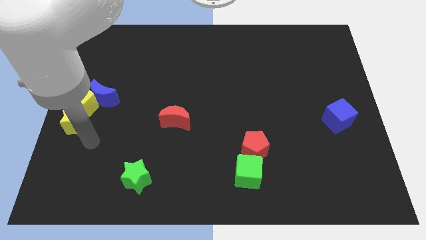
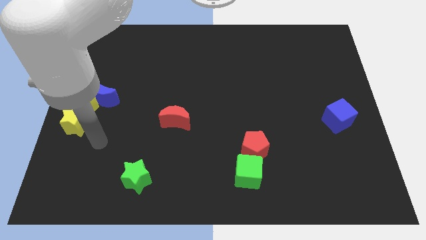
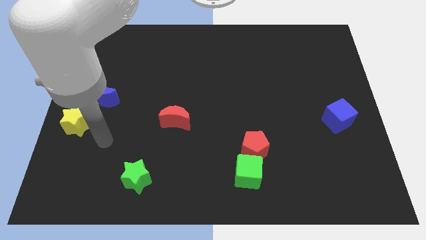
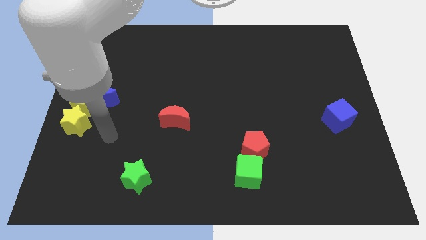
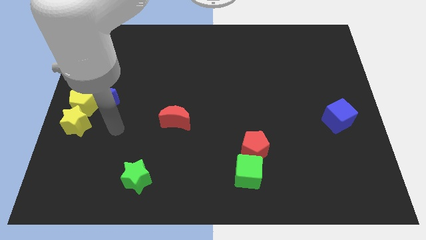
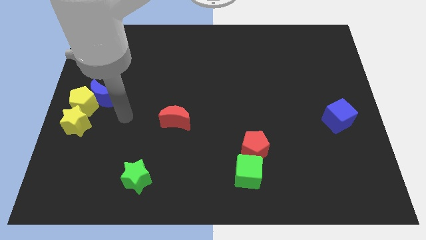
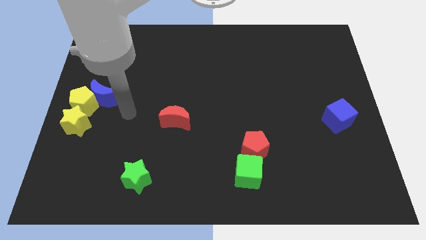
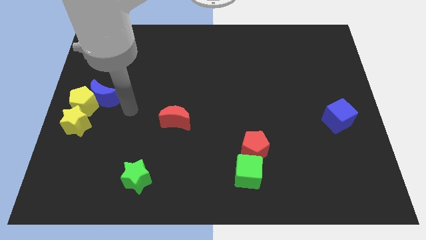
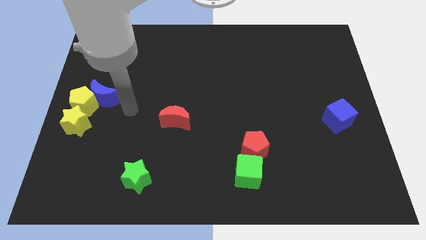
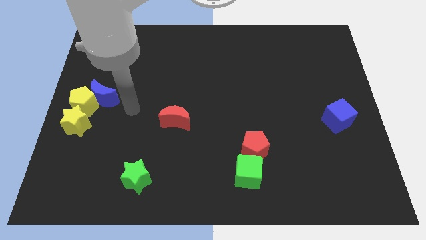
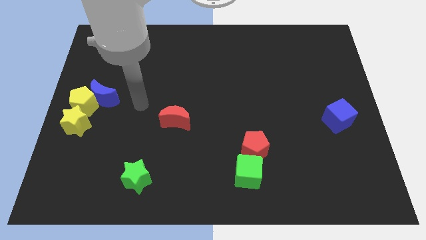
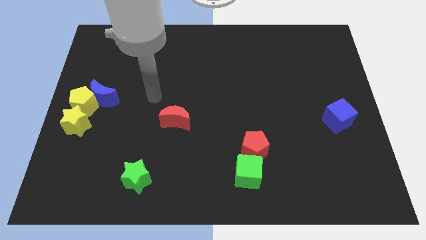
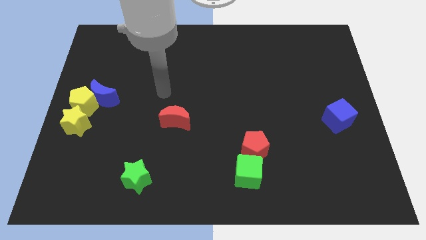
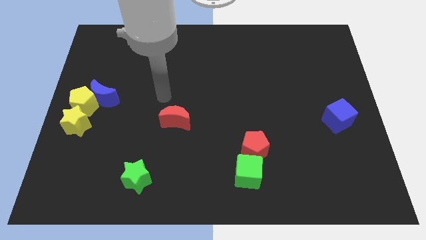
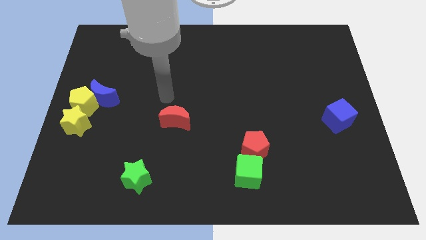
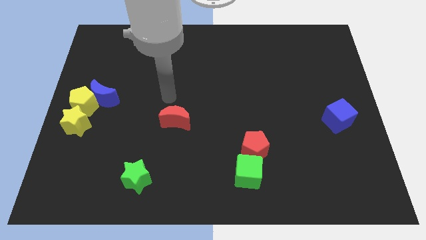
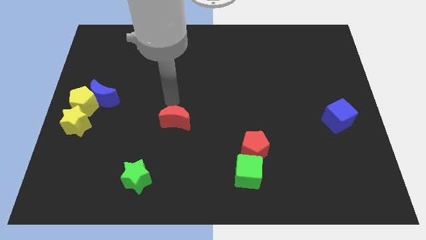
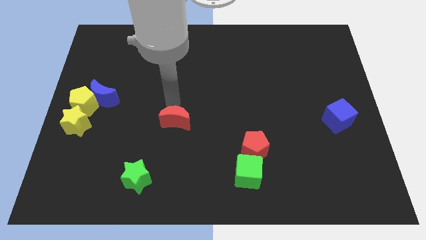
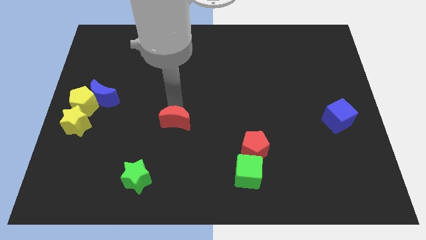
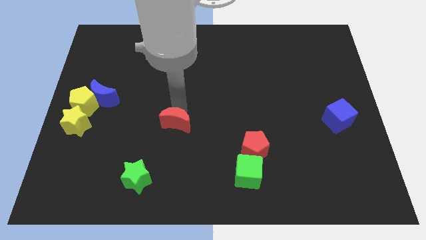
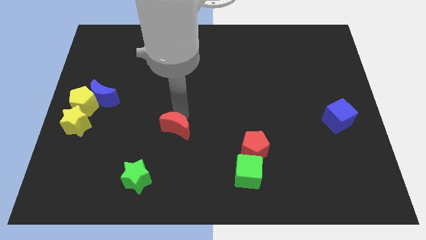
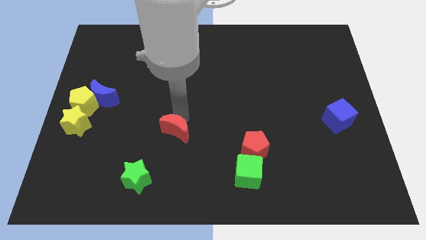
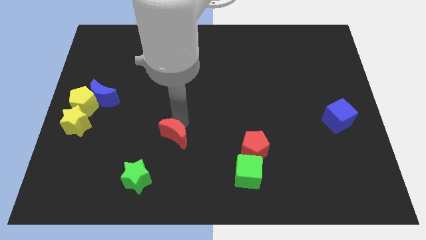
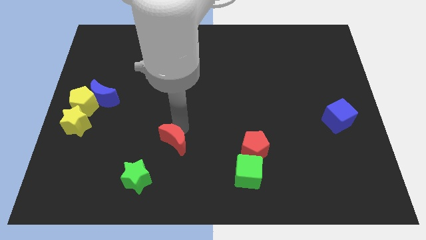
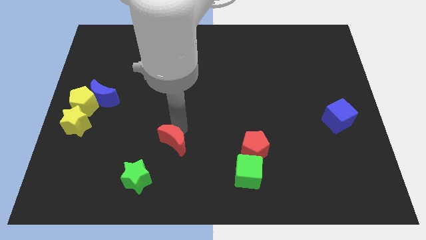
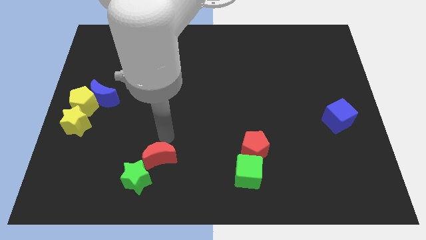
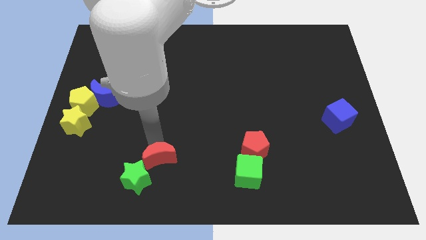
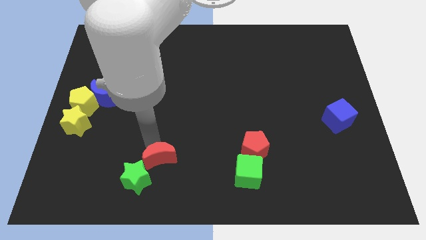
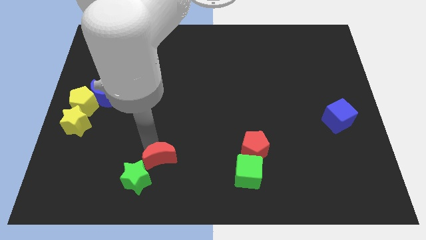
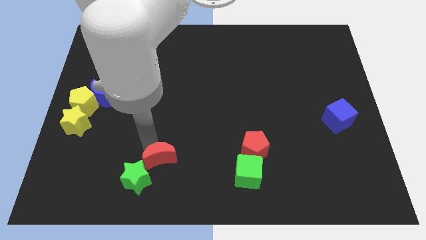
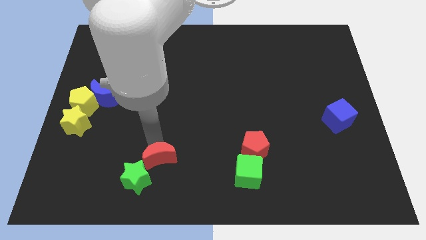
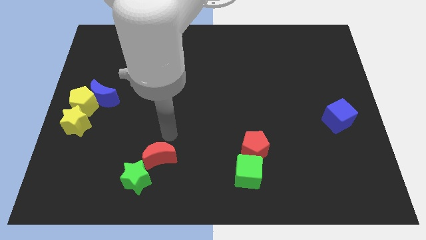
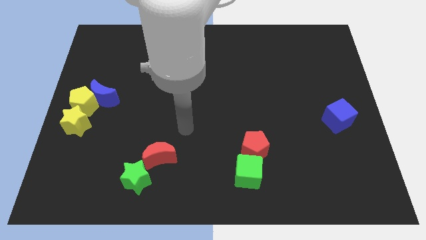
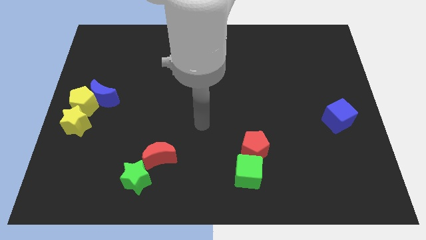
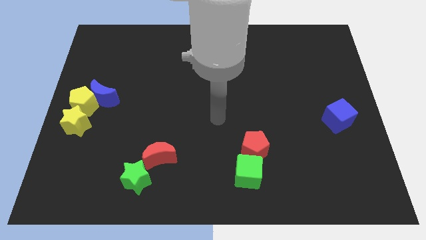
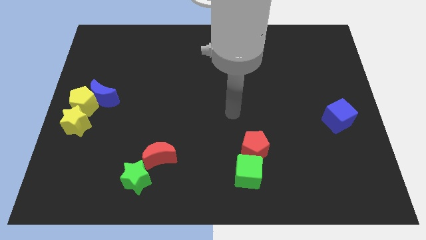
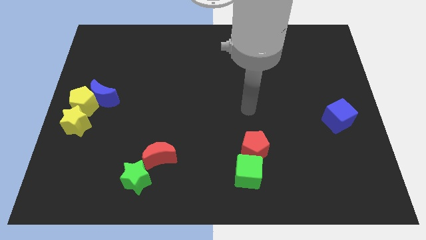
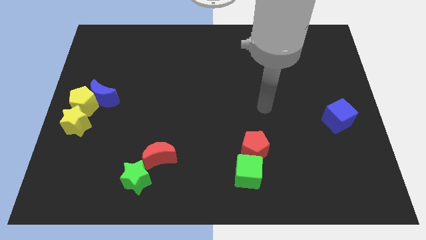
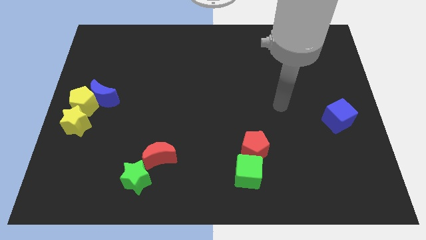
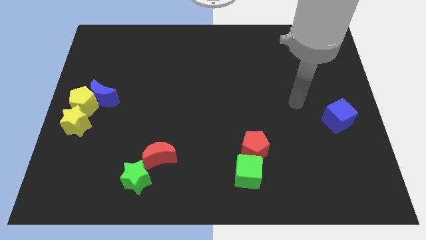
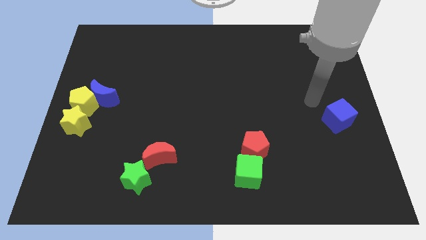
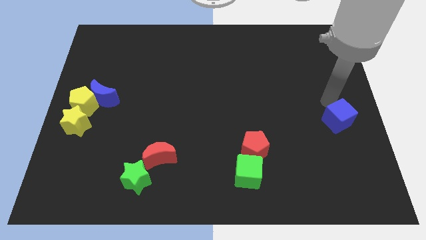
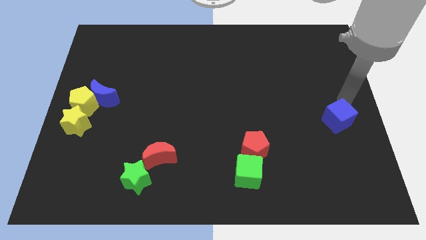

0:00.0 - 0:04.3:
place red crescent to the top right of green star

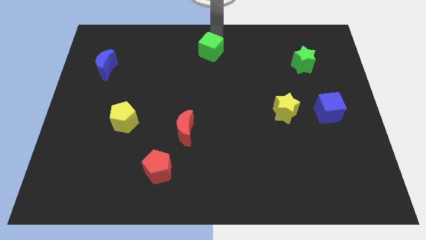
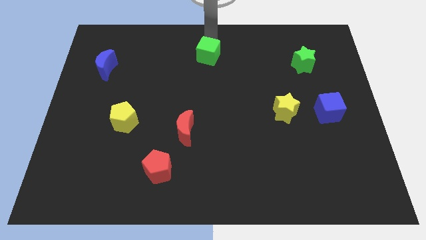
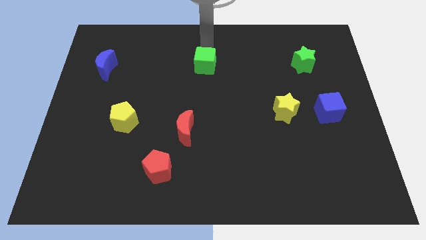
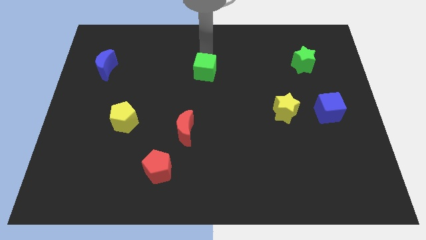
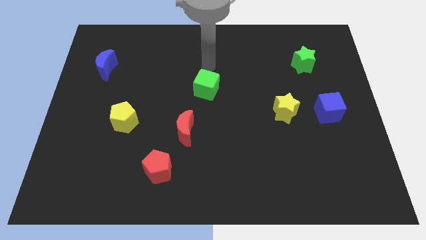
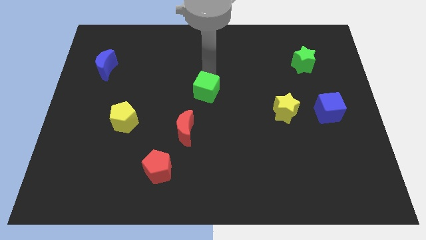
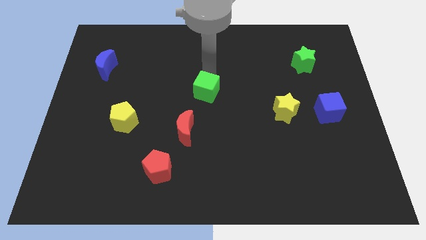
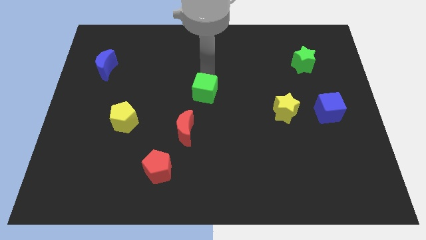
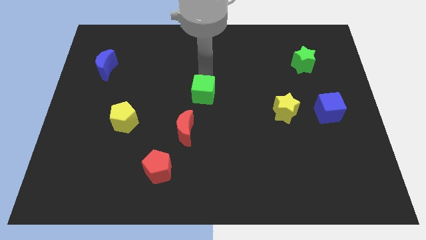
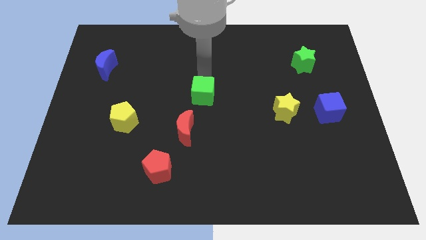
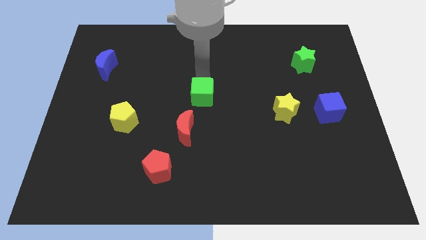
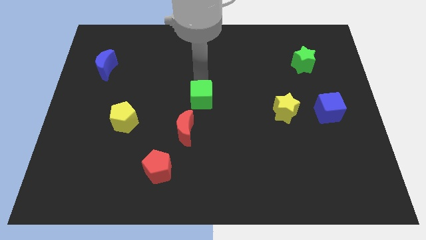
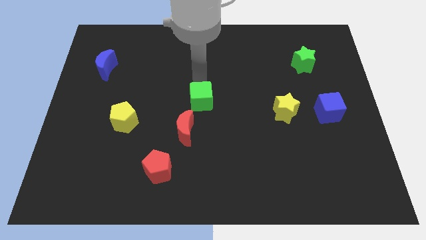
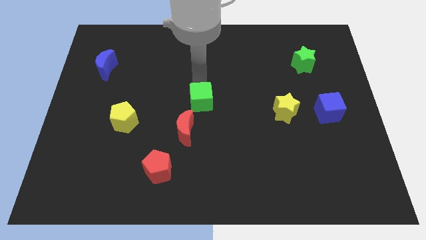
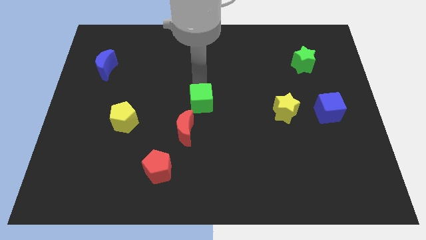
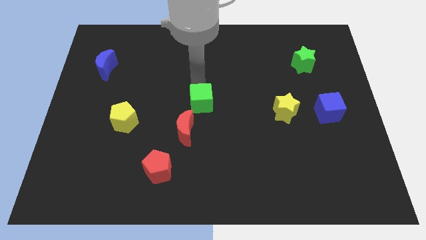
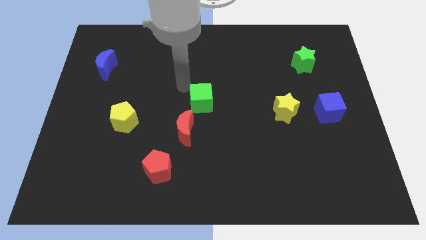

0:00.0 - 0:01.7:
place the green cube close to red crescent

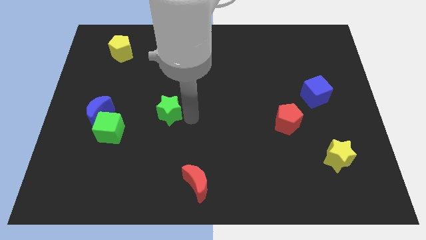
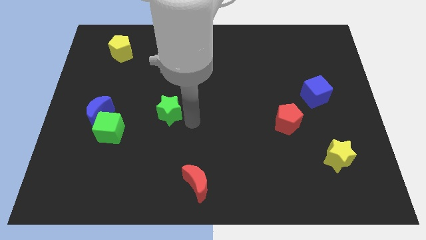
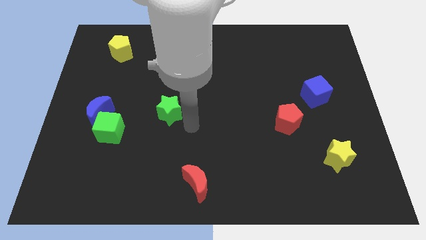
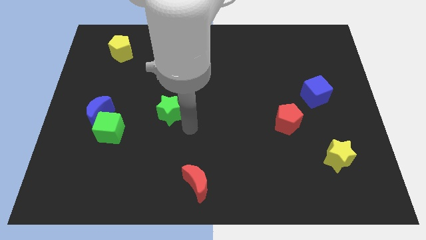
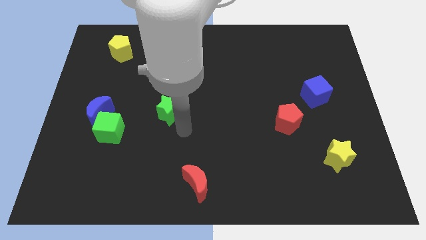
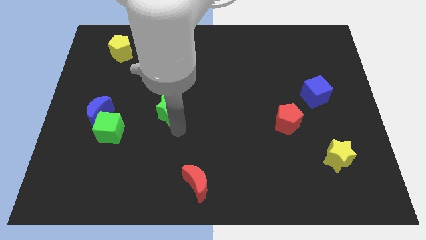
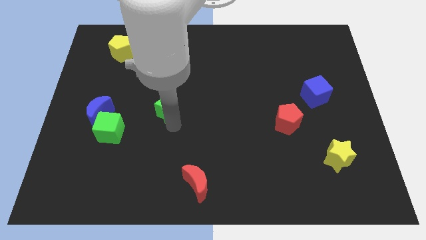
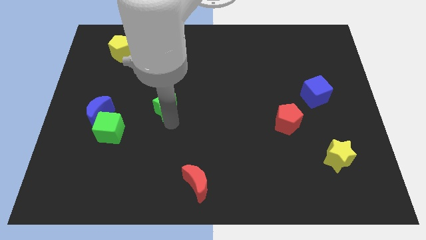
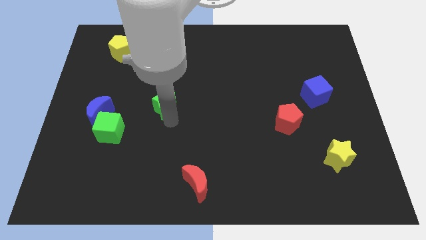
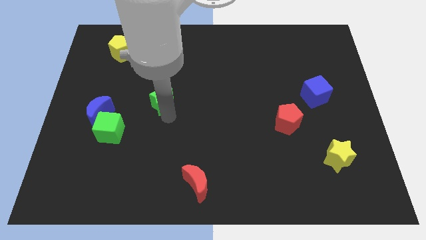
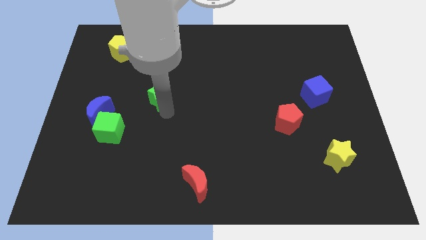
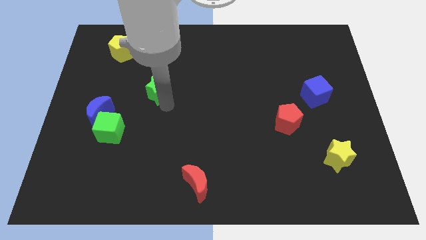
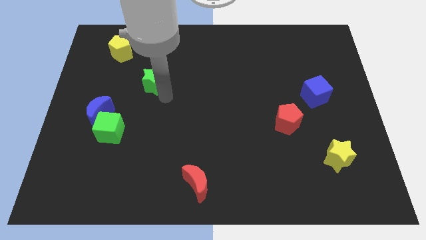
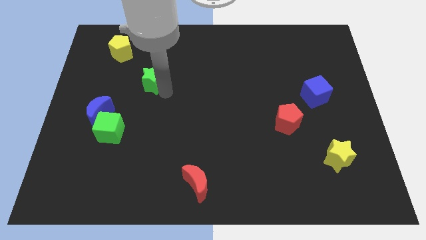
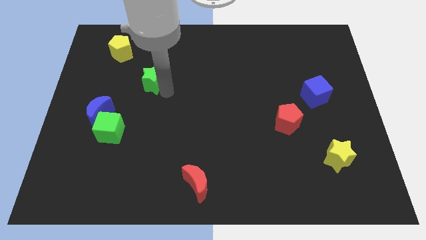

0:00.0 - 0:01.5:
place the green star diagonally on the top right side of the green cube

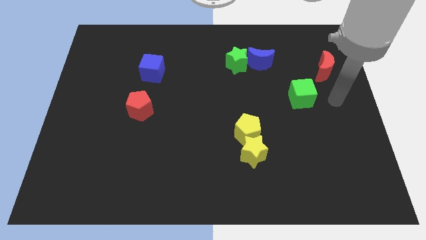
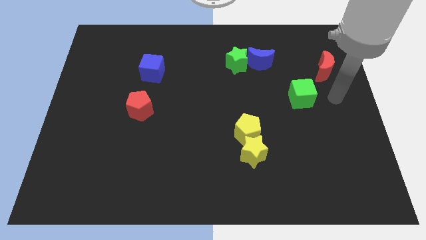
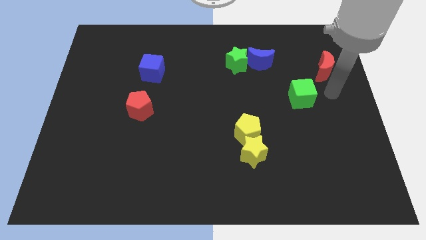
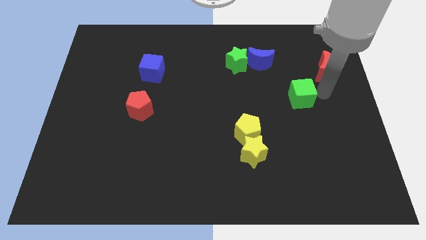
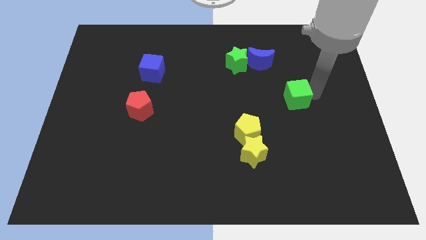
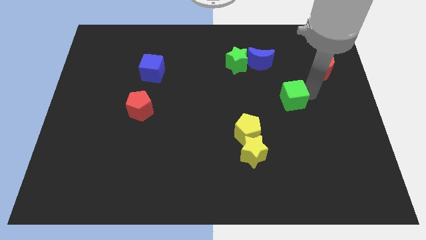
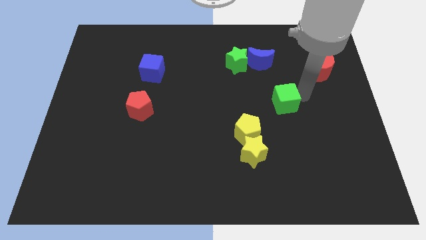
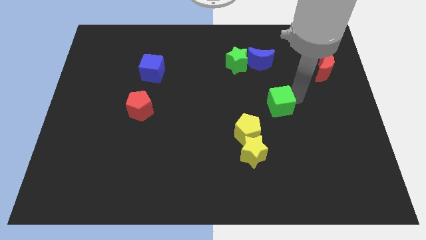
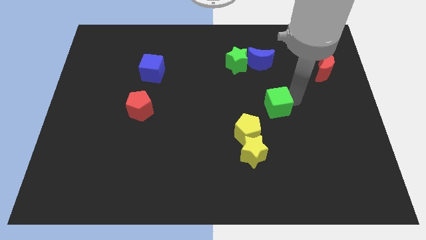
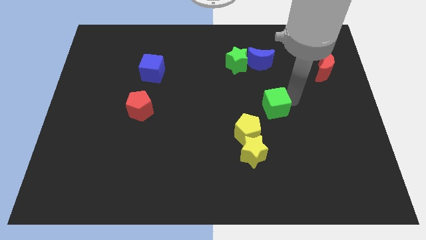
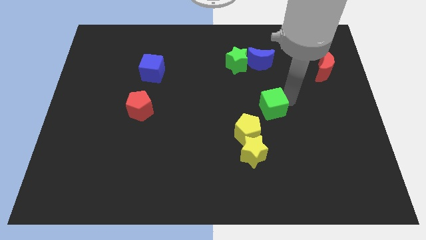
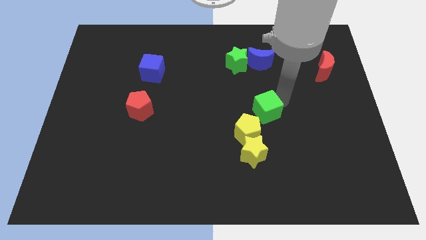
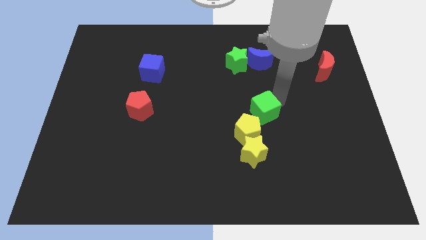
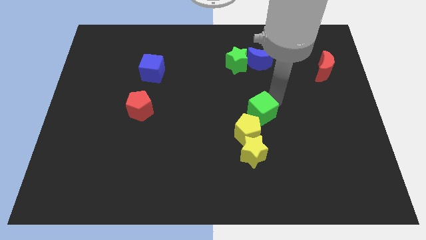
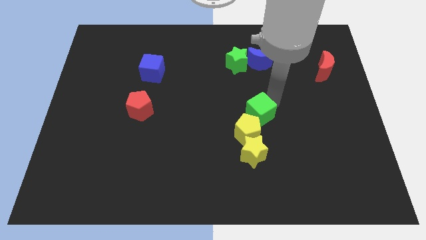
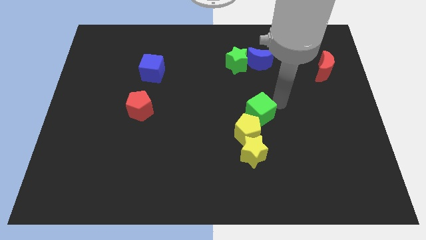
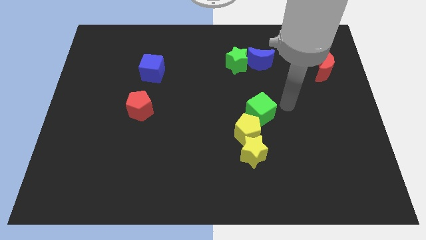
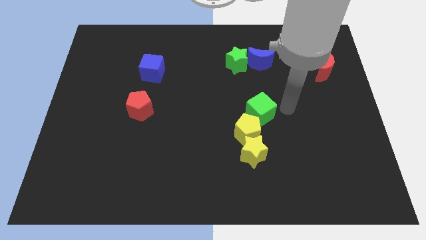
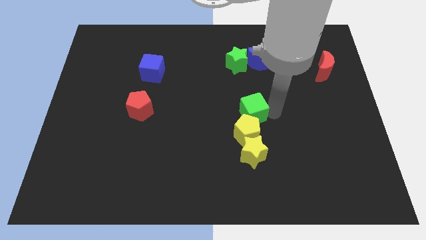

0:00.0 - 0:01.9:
push the green cube into the yellow pentagon
